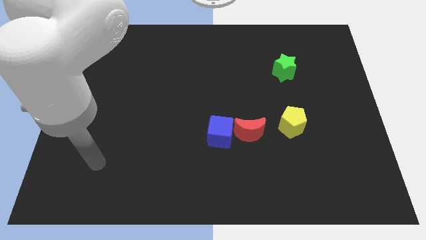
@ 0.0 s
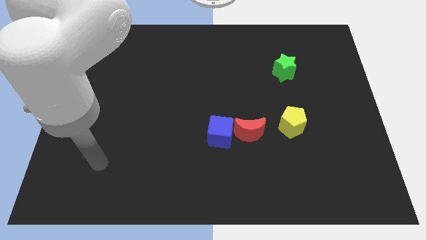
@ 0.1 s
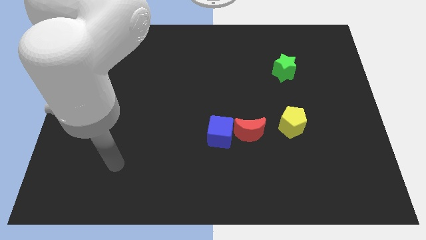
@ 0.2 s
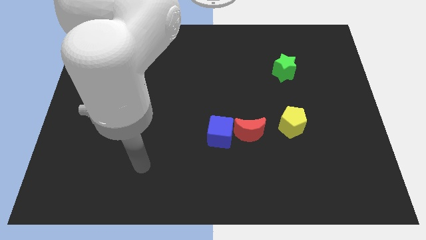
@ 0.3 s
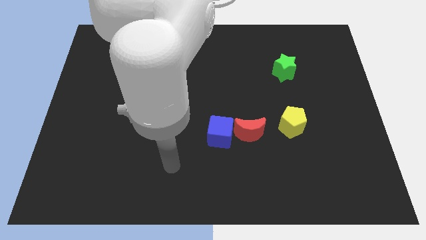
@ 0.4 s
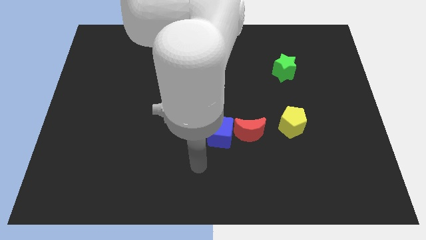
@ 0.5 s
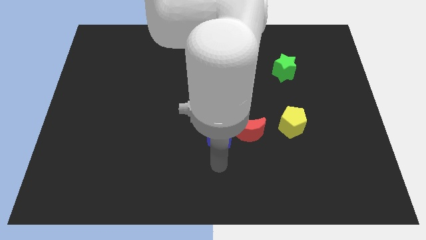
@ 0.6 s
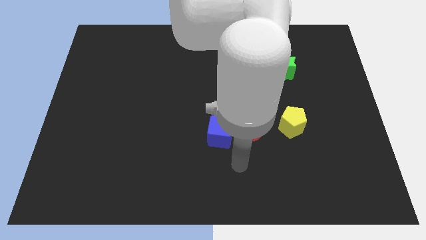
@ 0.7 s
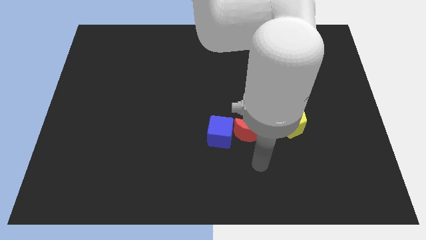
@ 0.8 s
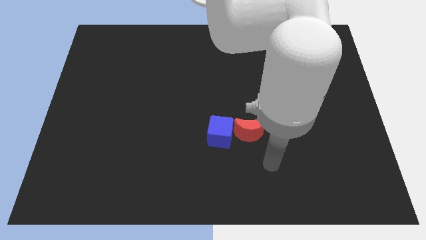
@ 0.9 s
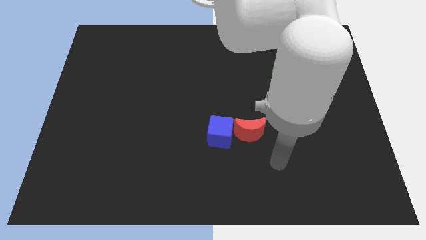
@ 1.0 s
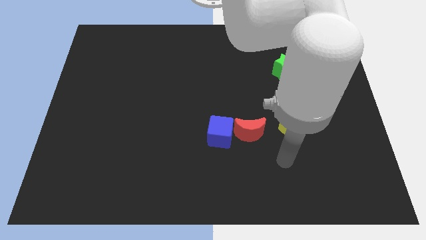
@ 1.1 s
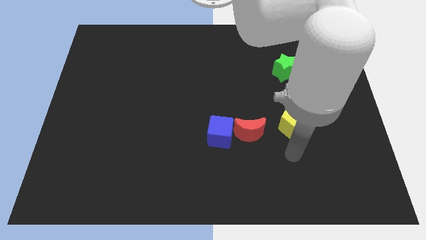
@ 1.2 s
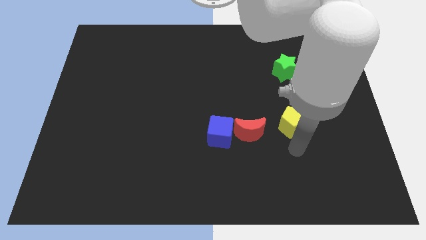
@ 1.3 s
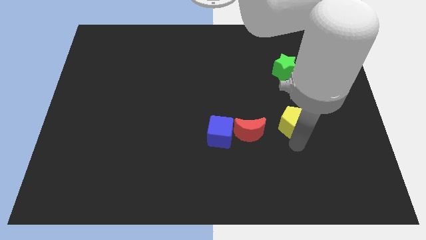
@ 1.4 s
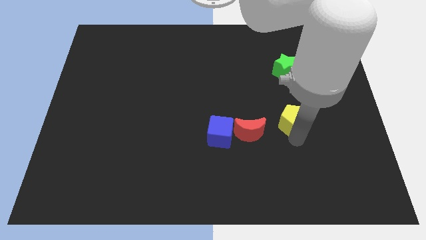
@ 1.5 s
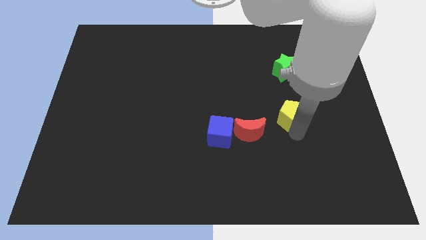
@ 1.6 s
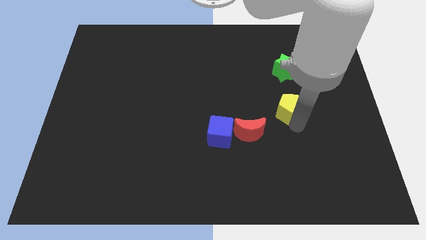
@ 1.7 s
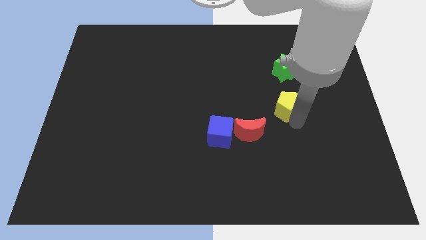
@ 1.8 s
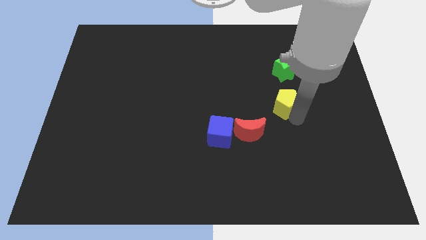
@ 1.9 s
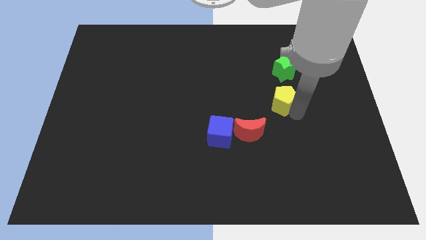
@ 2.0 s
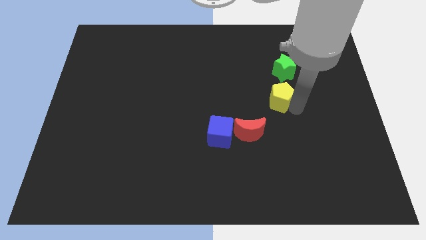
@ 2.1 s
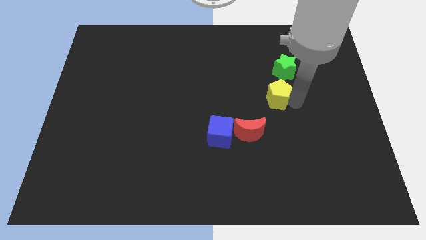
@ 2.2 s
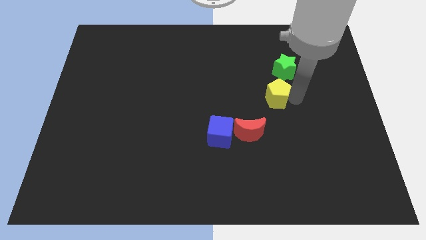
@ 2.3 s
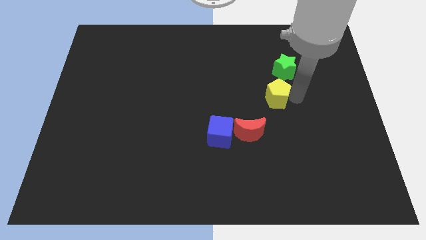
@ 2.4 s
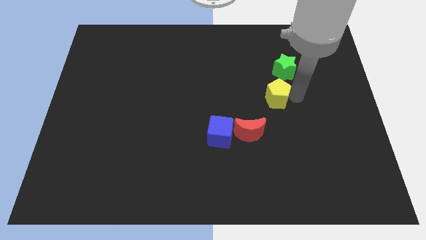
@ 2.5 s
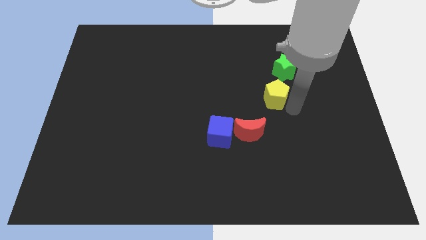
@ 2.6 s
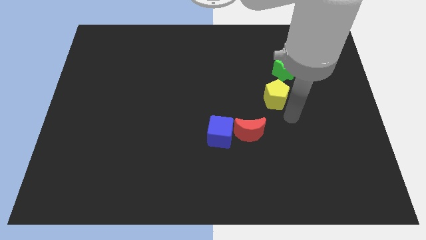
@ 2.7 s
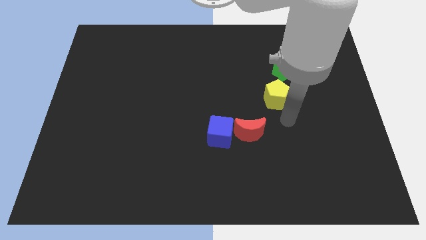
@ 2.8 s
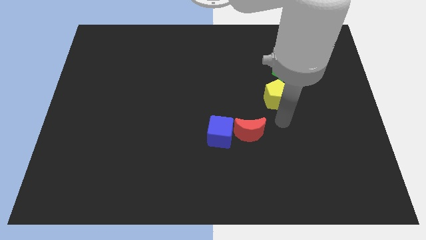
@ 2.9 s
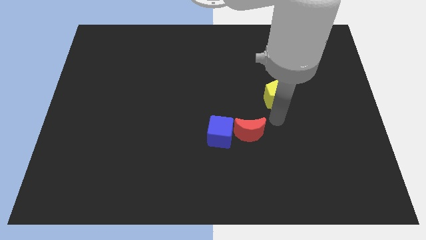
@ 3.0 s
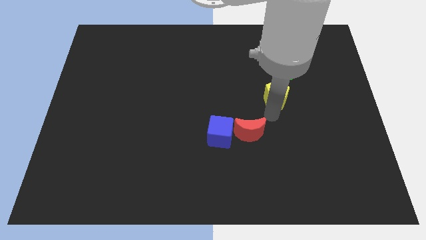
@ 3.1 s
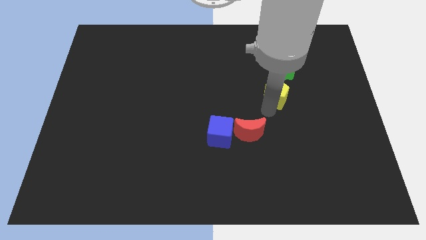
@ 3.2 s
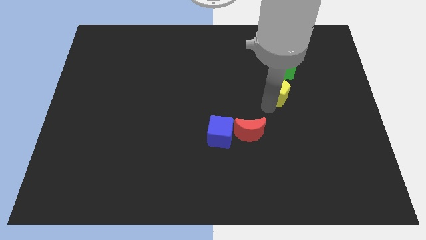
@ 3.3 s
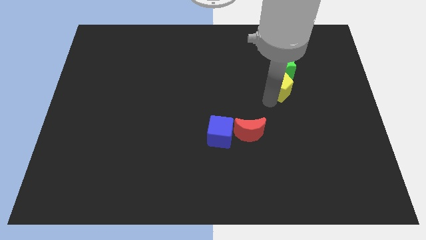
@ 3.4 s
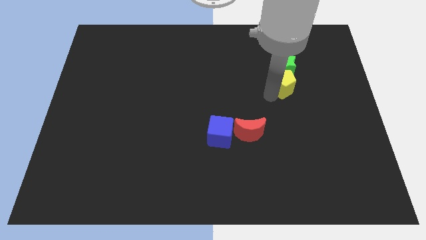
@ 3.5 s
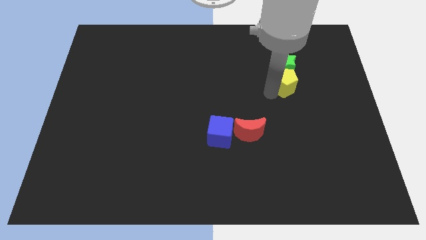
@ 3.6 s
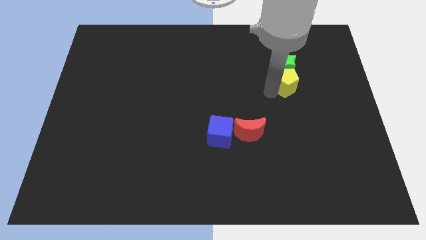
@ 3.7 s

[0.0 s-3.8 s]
slide the yellow block towards the green block

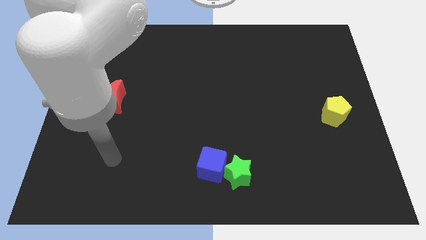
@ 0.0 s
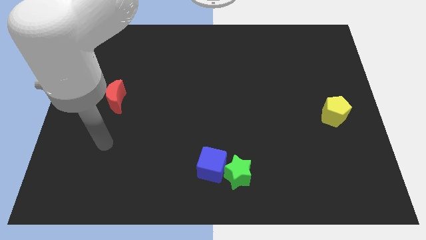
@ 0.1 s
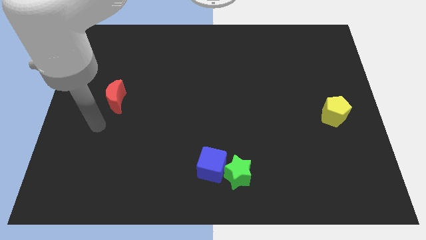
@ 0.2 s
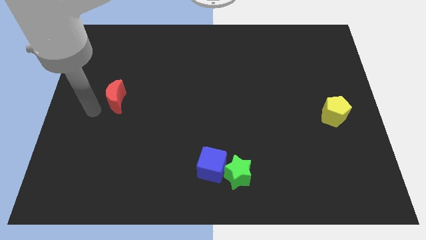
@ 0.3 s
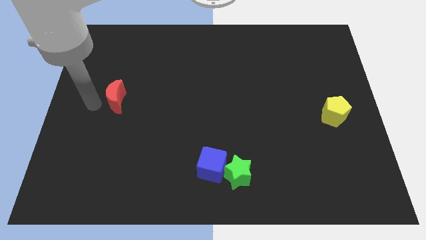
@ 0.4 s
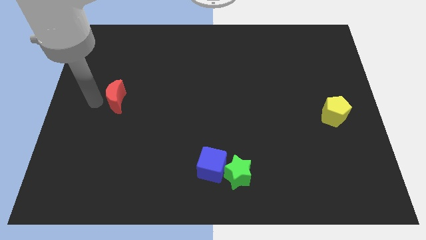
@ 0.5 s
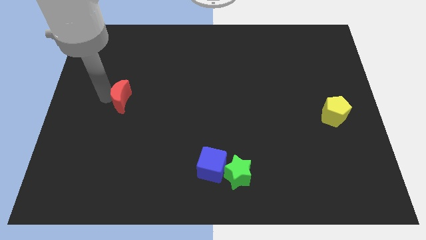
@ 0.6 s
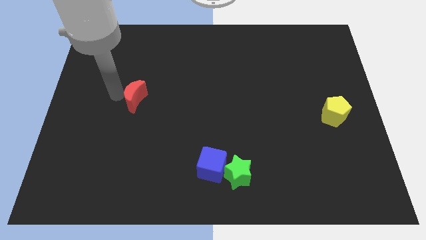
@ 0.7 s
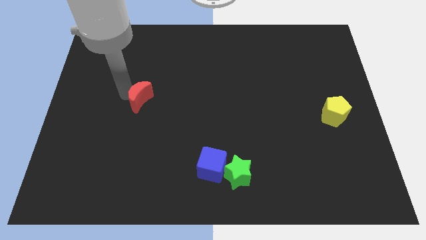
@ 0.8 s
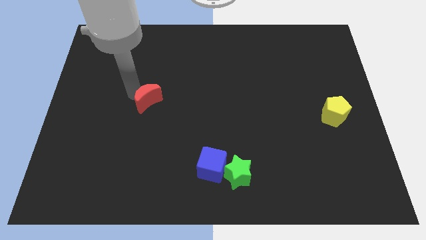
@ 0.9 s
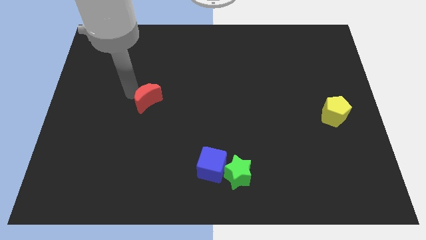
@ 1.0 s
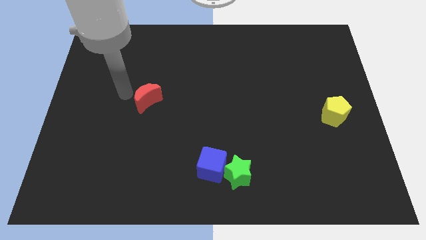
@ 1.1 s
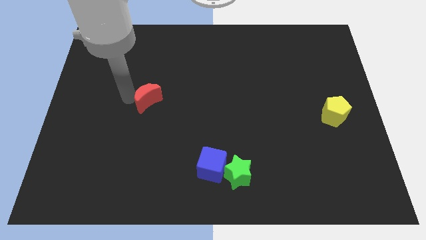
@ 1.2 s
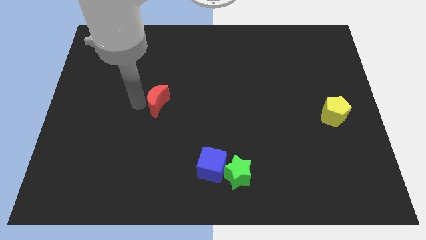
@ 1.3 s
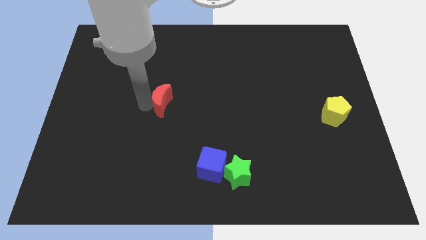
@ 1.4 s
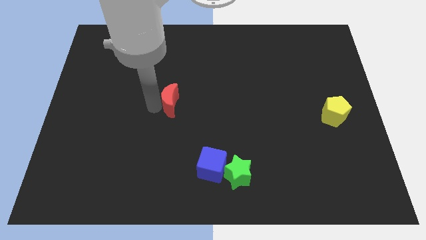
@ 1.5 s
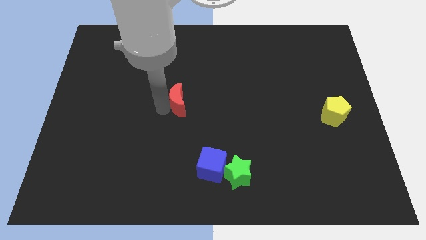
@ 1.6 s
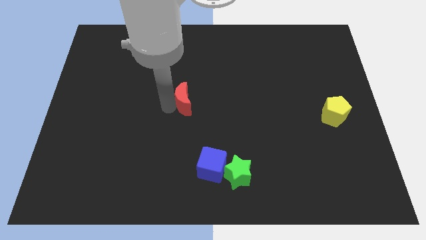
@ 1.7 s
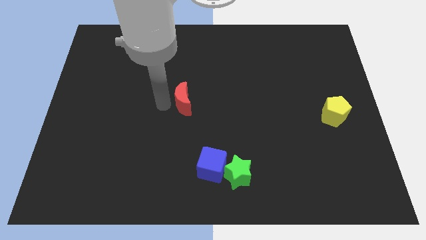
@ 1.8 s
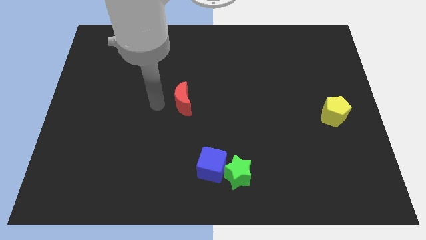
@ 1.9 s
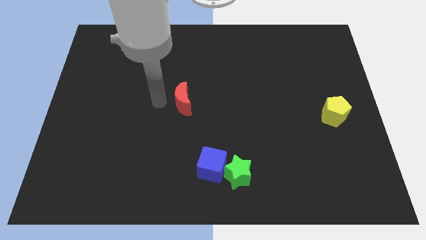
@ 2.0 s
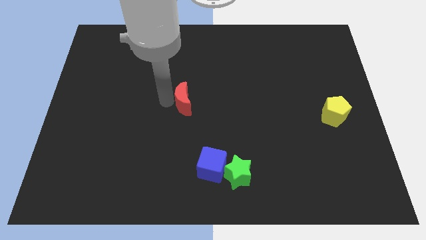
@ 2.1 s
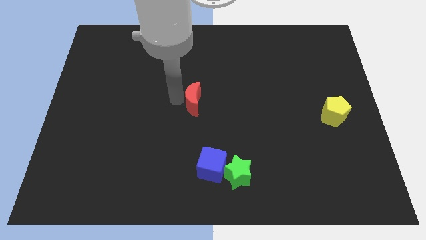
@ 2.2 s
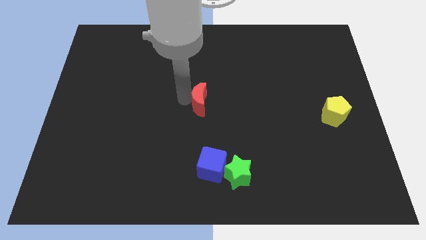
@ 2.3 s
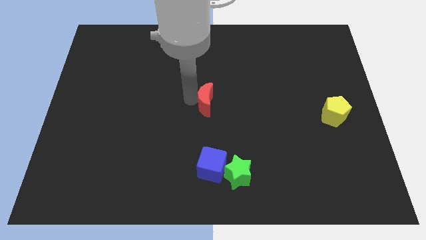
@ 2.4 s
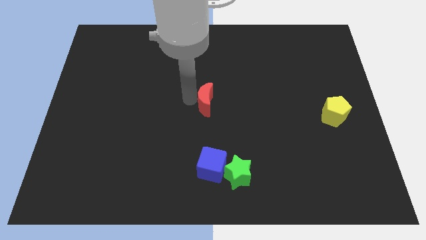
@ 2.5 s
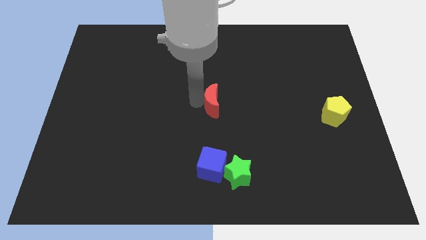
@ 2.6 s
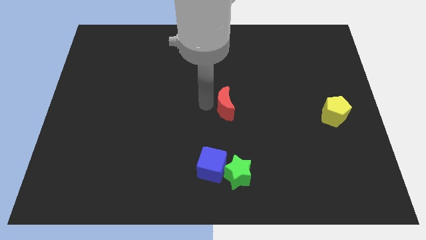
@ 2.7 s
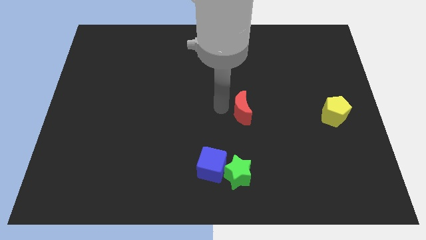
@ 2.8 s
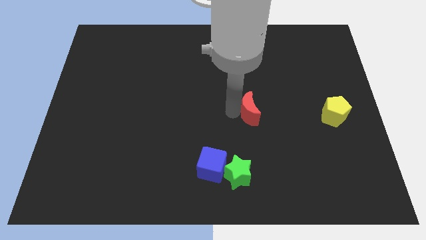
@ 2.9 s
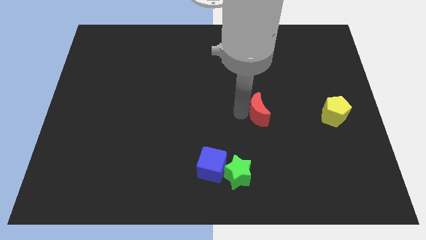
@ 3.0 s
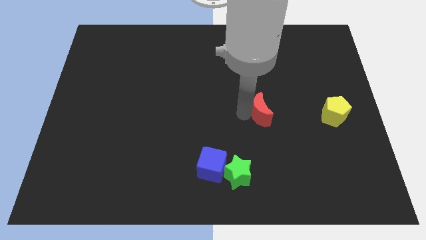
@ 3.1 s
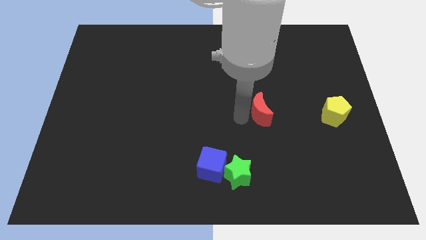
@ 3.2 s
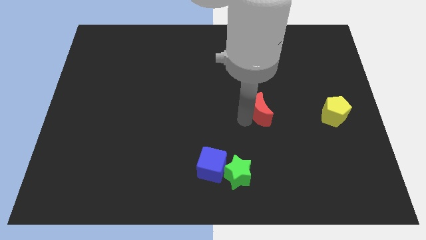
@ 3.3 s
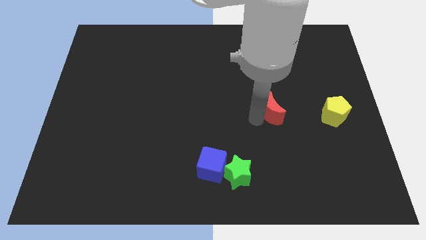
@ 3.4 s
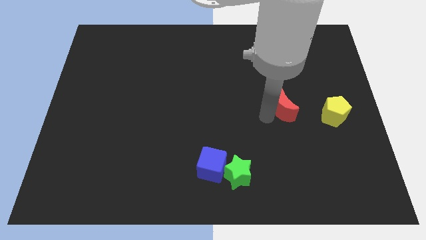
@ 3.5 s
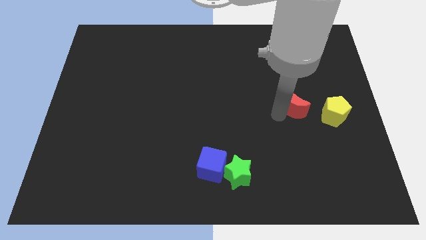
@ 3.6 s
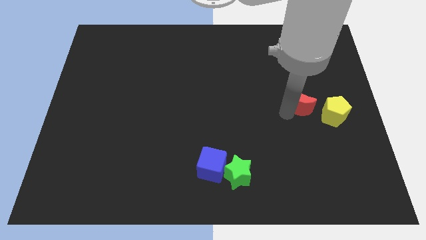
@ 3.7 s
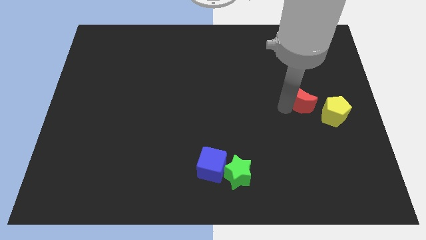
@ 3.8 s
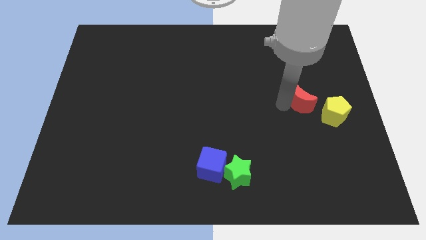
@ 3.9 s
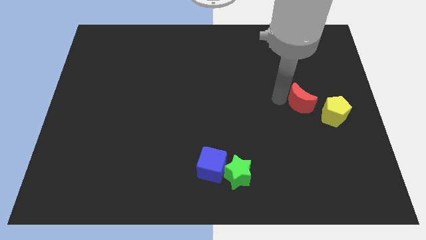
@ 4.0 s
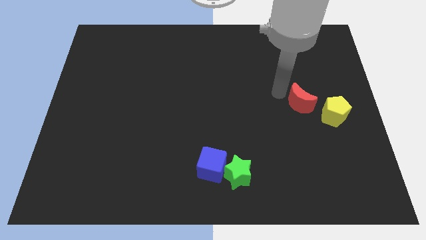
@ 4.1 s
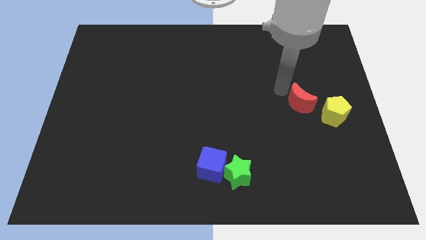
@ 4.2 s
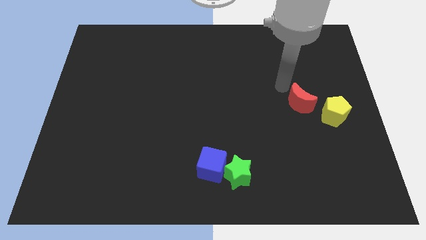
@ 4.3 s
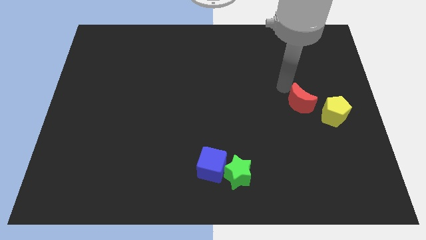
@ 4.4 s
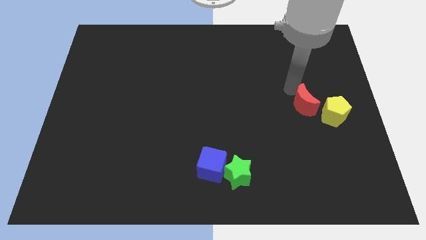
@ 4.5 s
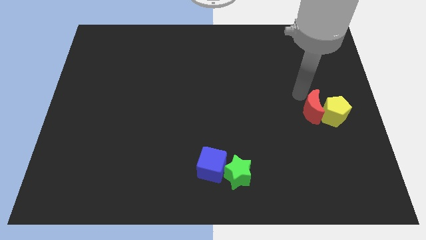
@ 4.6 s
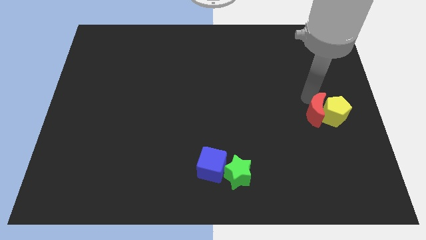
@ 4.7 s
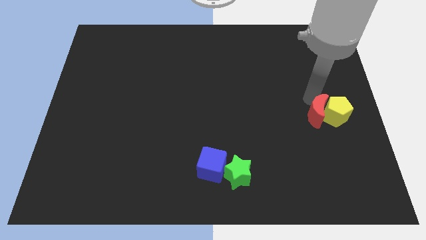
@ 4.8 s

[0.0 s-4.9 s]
slide the red block next to the yellow block

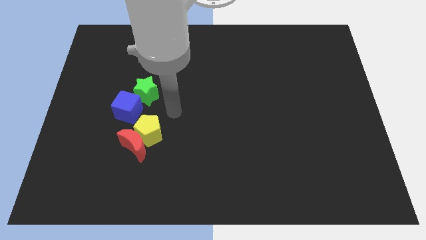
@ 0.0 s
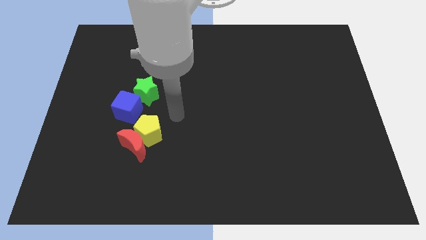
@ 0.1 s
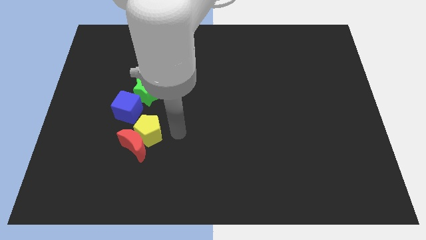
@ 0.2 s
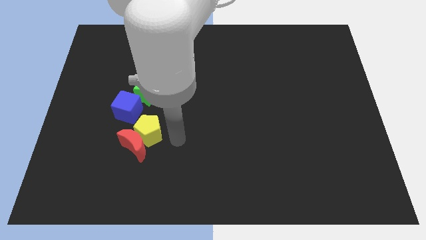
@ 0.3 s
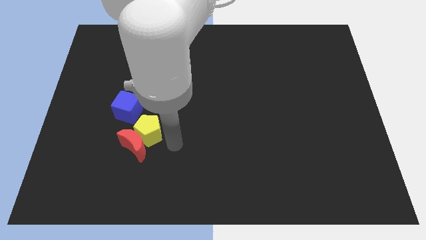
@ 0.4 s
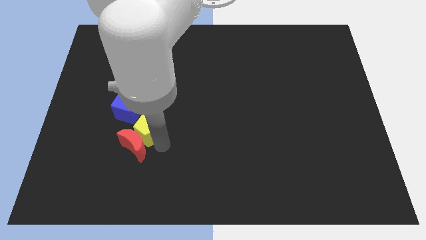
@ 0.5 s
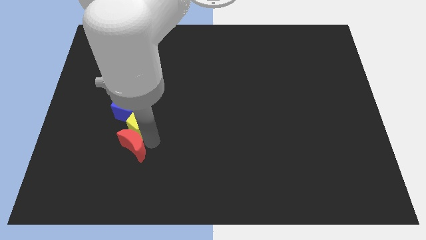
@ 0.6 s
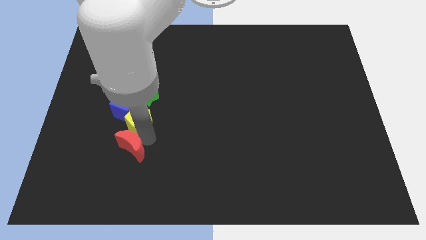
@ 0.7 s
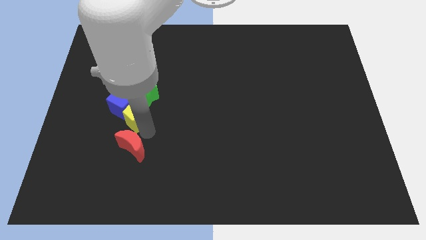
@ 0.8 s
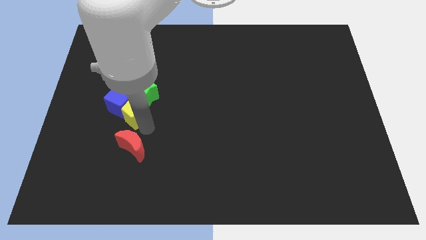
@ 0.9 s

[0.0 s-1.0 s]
push the yellow pentagon next to the blue cube
